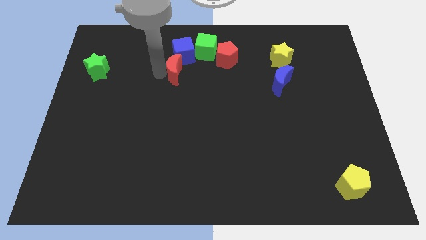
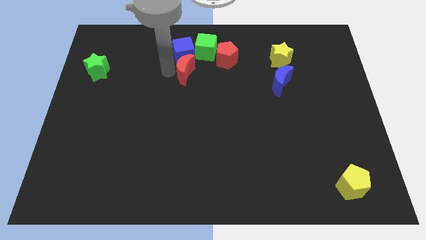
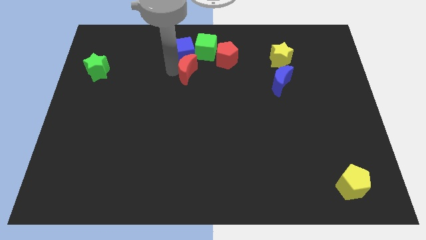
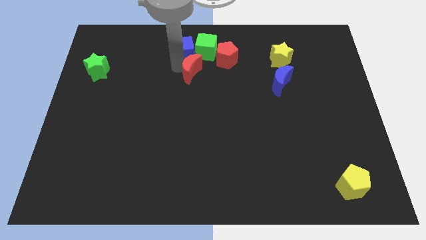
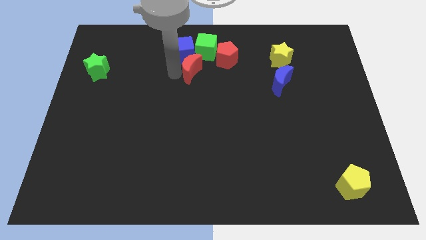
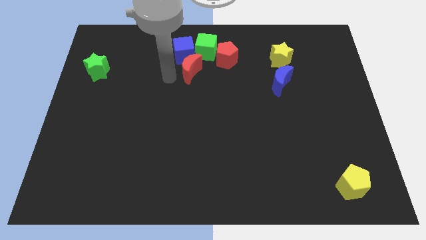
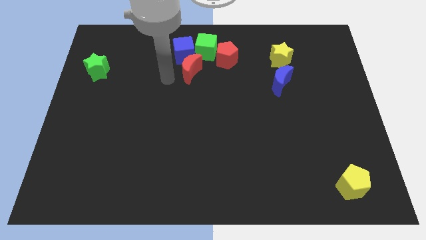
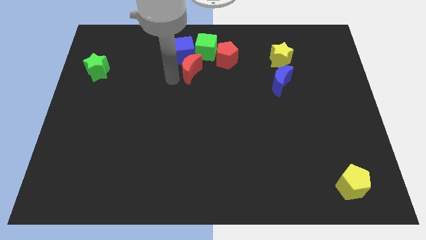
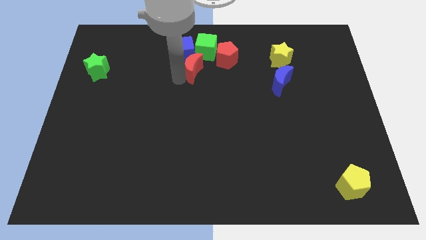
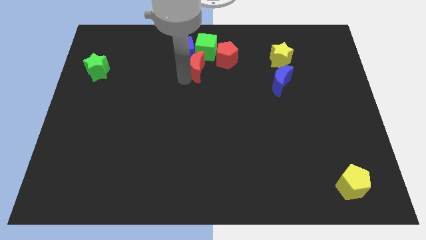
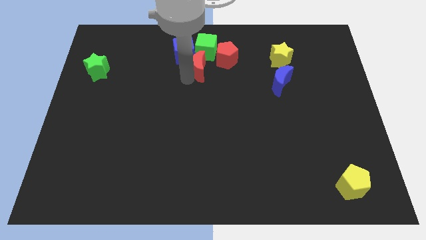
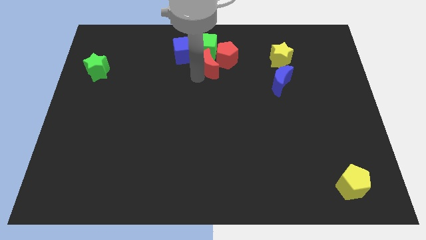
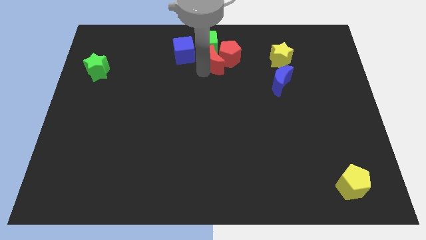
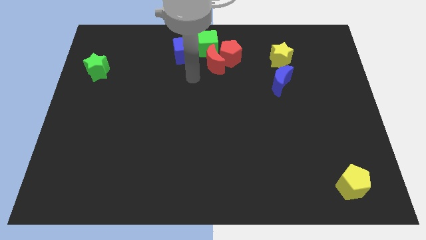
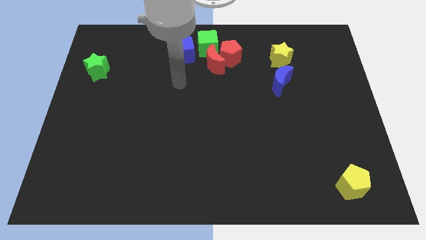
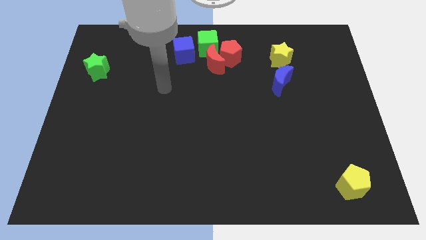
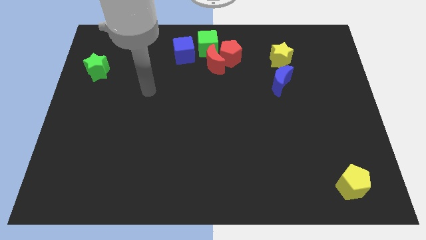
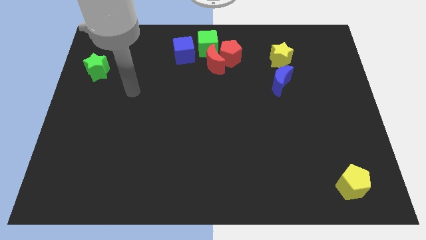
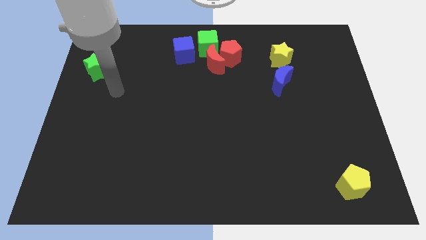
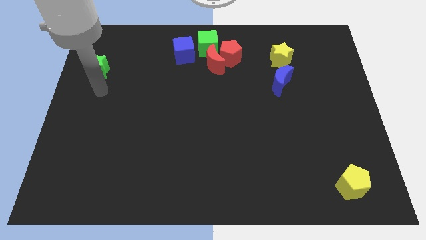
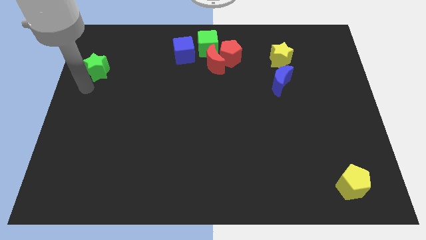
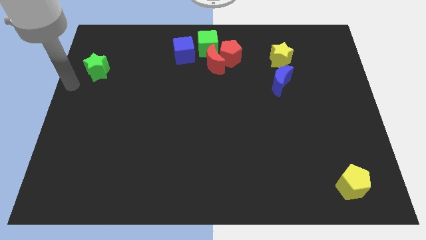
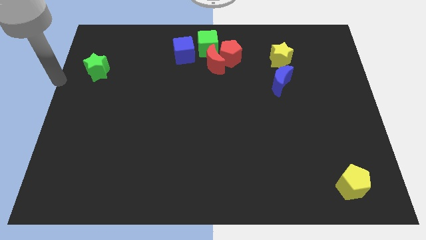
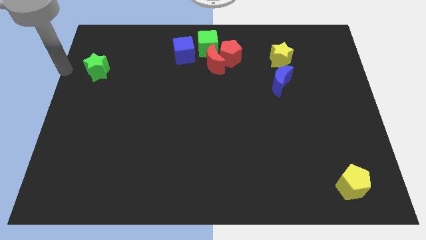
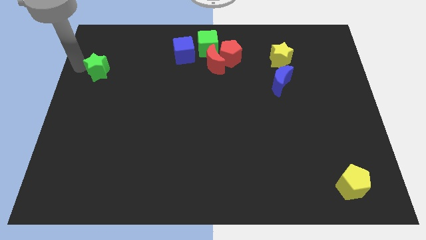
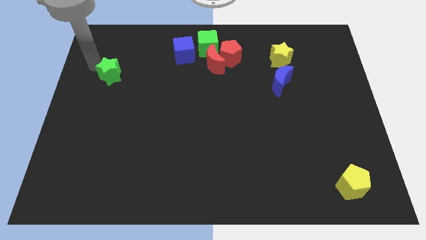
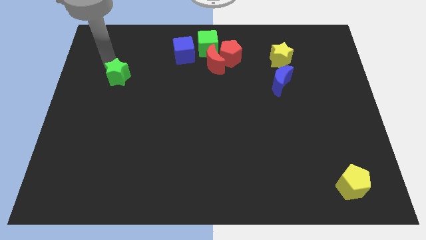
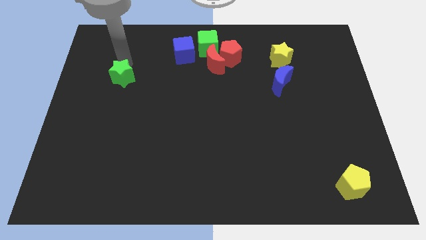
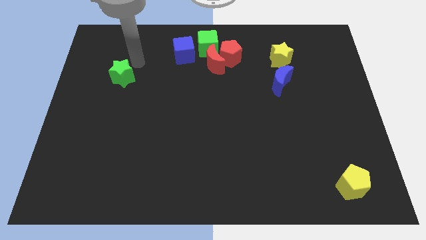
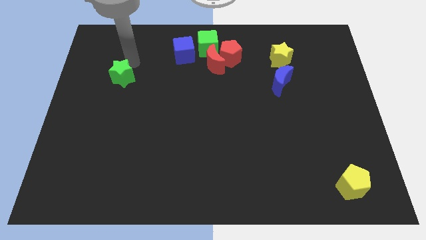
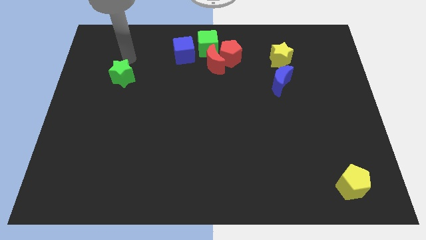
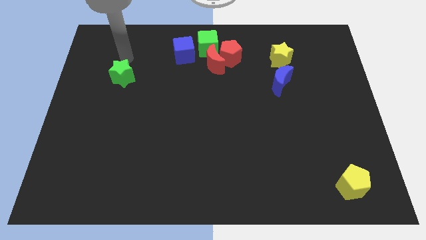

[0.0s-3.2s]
move the arm above to the green star

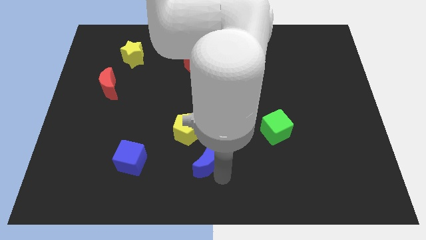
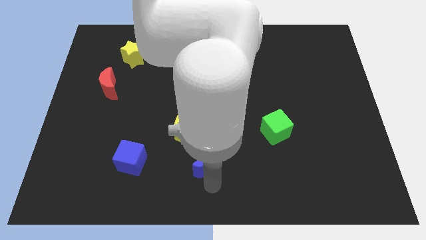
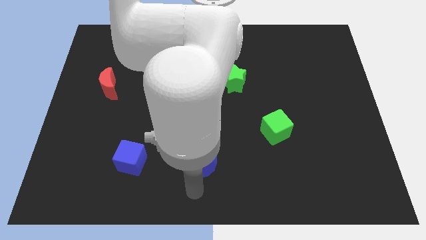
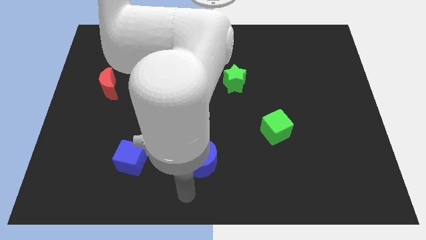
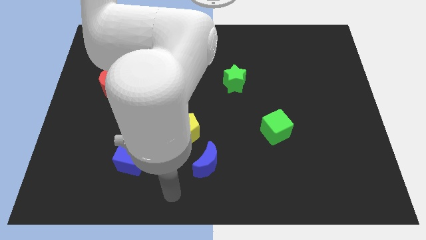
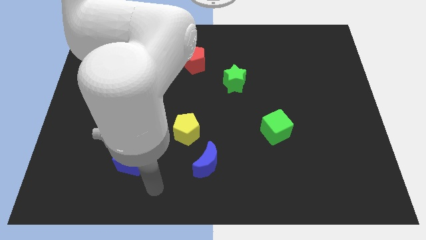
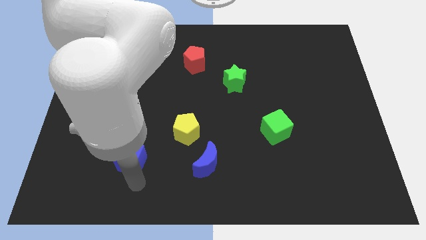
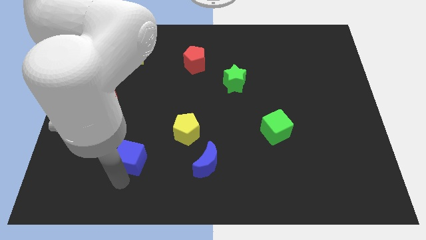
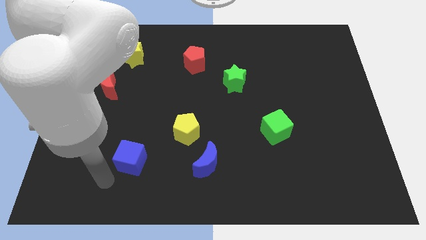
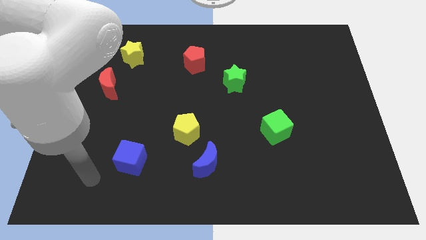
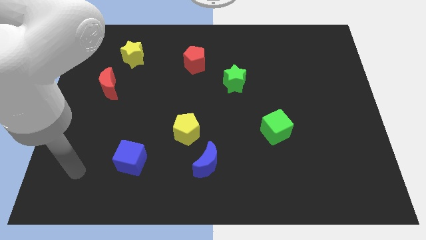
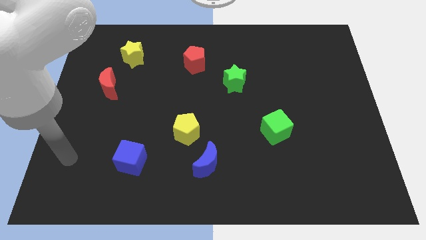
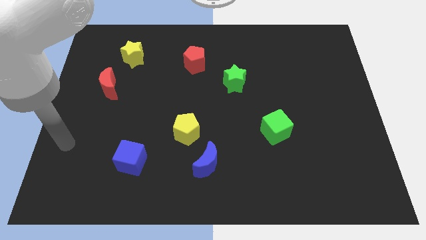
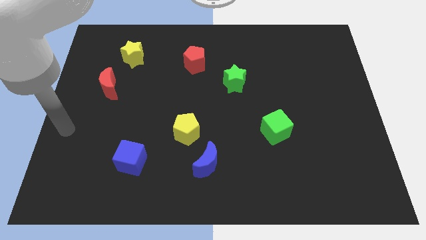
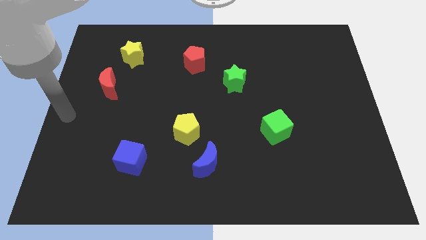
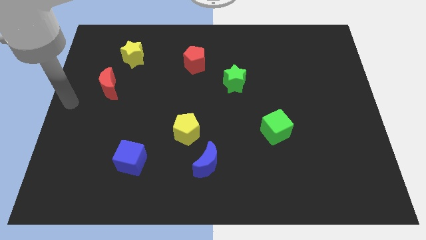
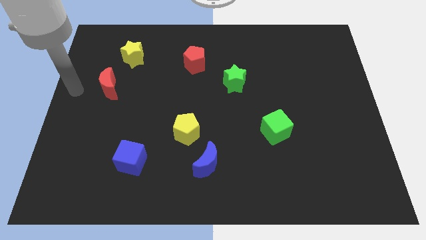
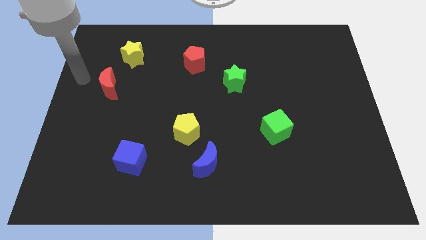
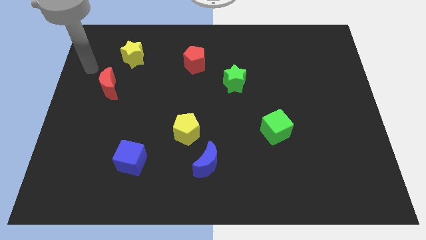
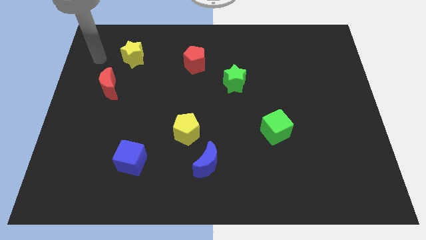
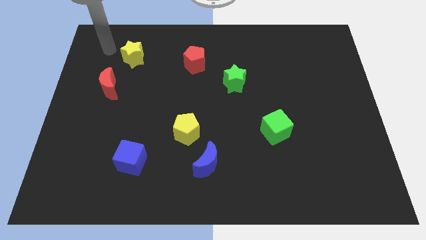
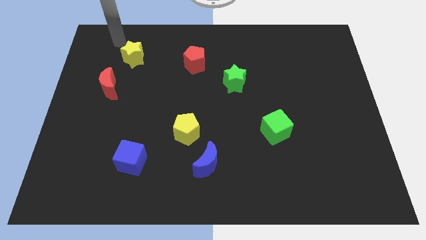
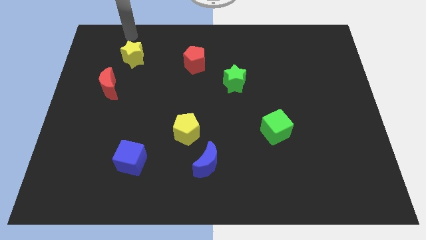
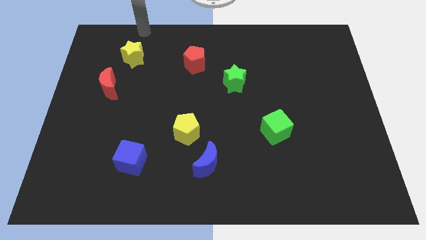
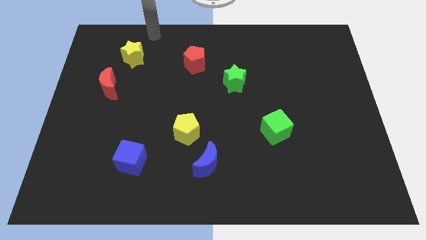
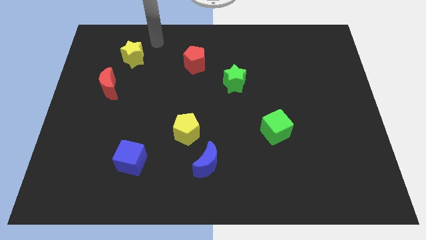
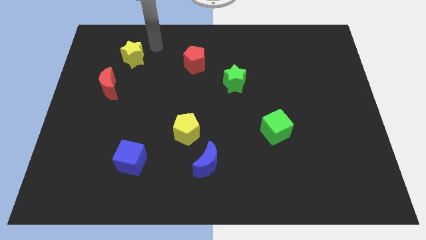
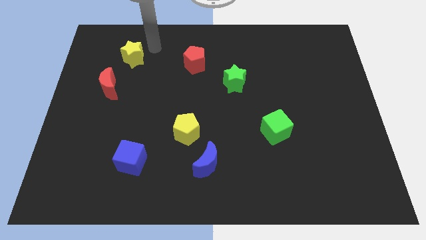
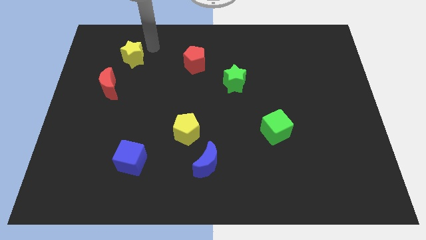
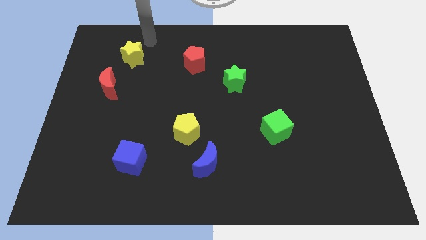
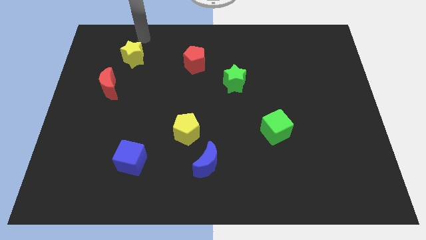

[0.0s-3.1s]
move your arm towards the top left

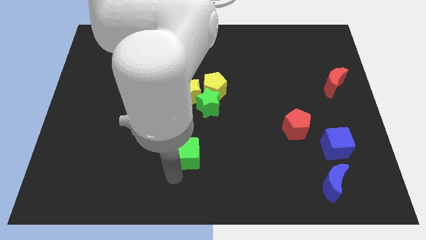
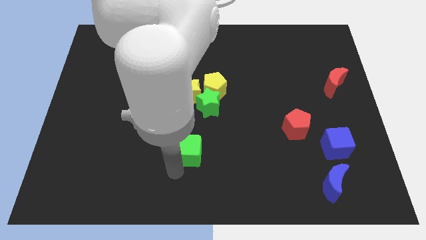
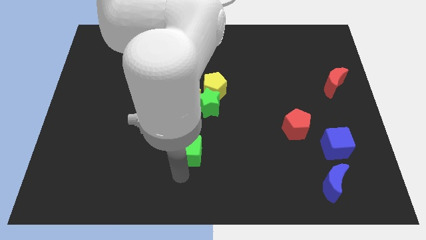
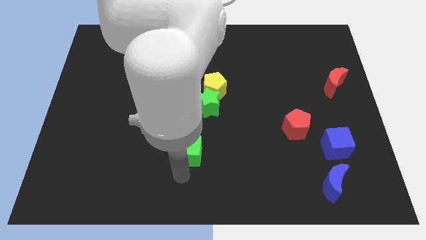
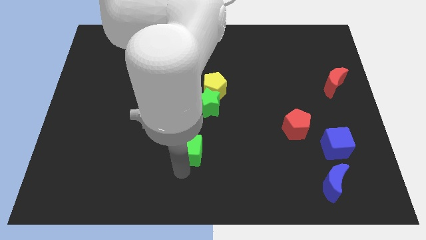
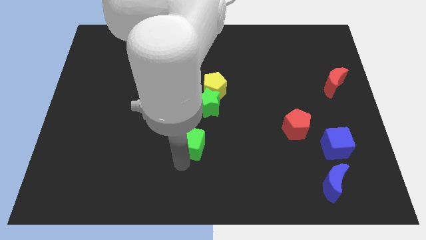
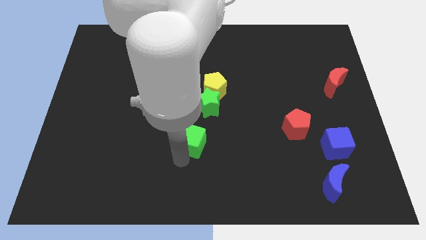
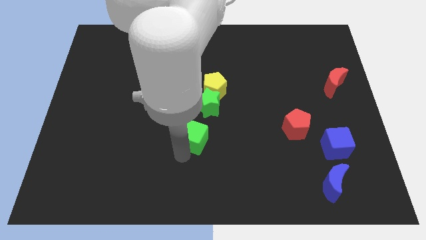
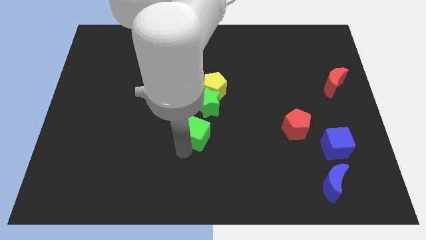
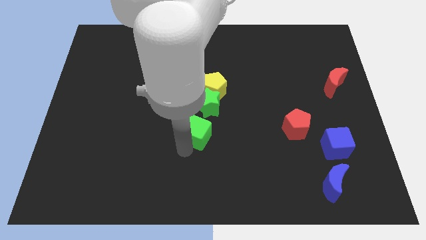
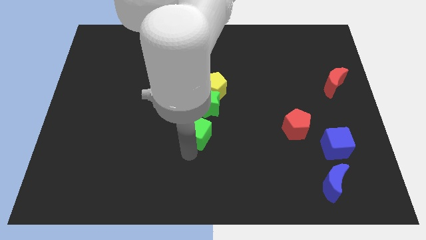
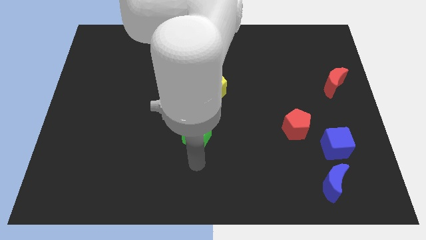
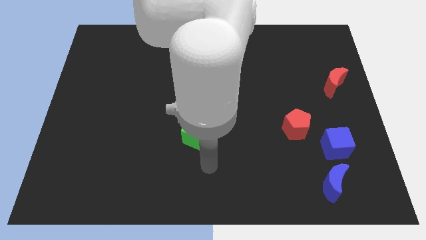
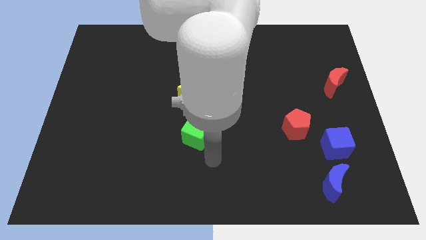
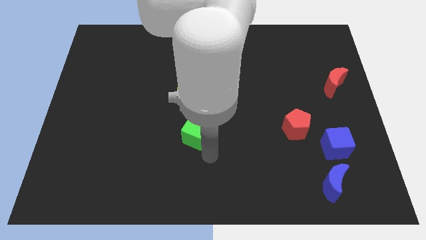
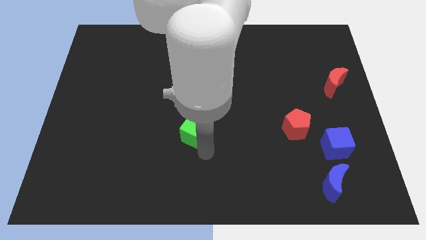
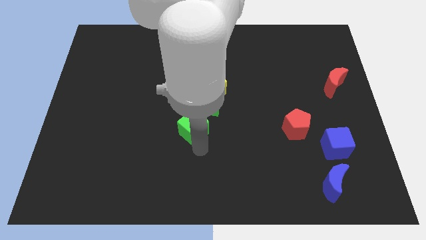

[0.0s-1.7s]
place the green cube left to the red pentagon

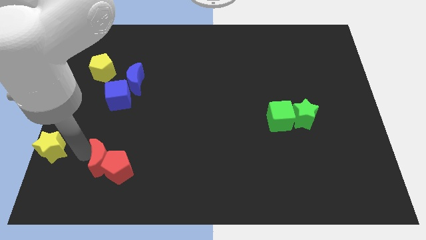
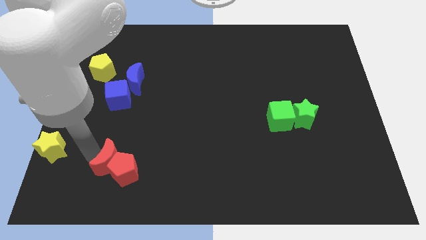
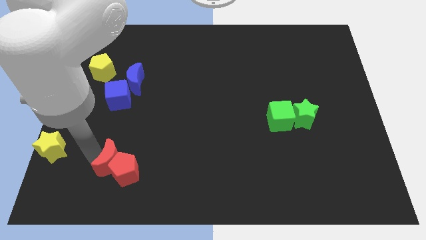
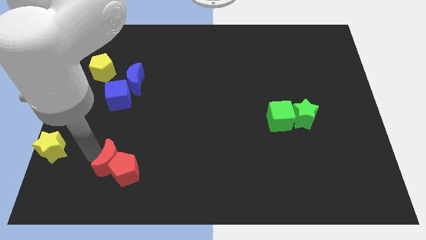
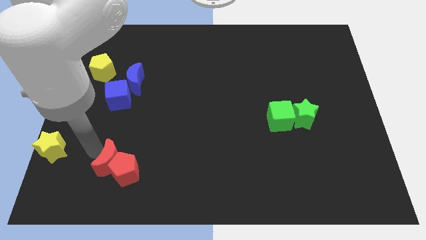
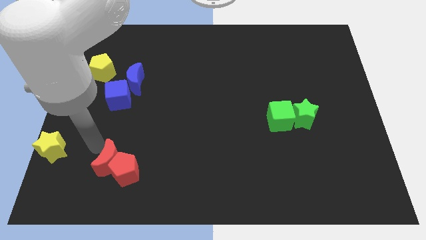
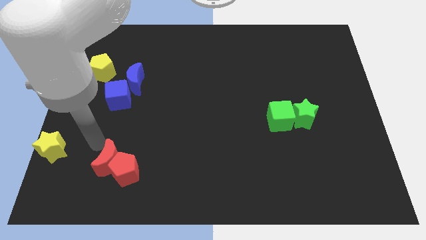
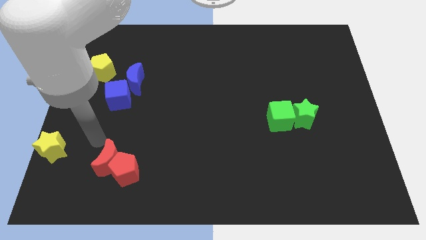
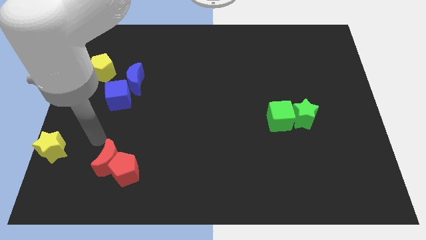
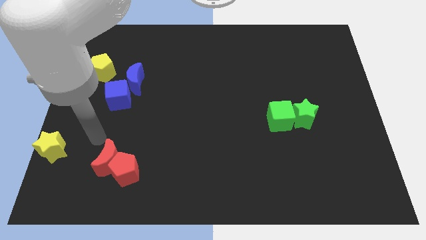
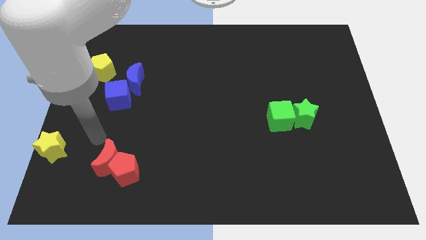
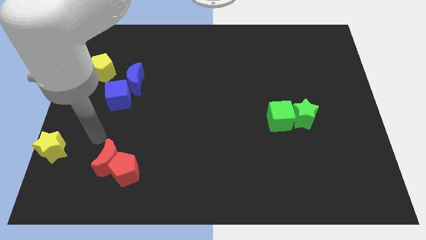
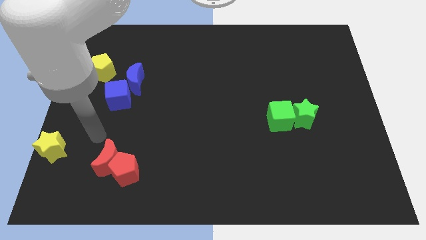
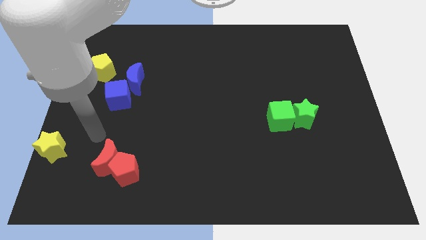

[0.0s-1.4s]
push the red crescent and the red pentagon slightly downwards
